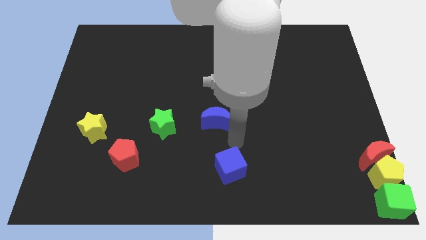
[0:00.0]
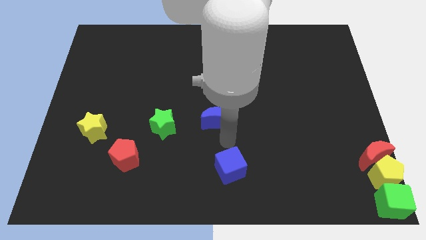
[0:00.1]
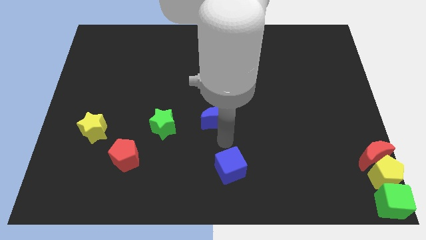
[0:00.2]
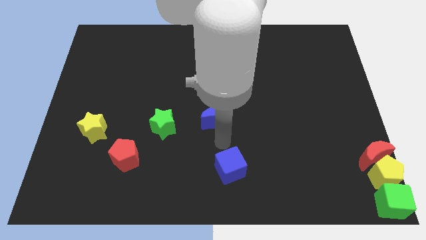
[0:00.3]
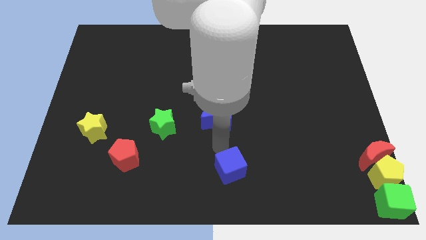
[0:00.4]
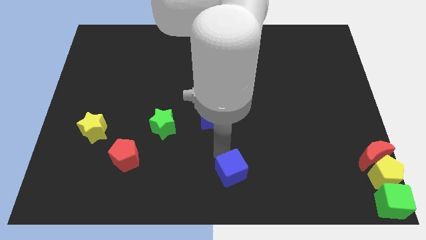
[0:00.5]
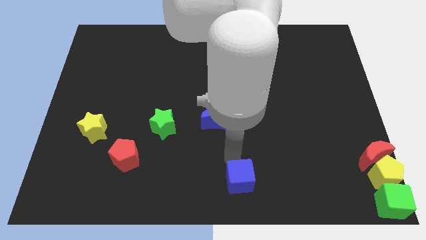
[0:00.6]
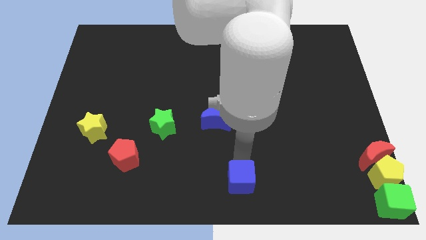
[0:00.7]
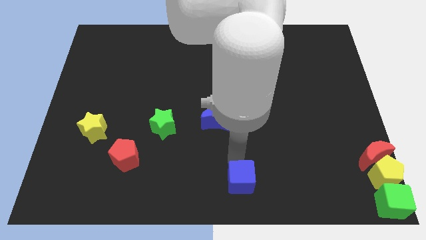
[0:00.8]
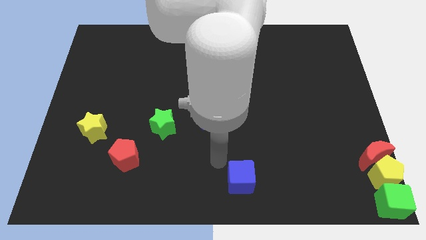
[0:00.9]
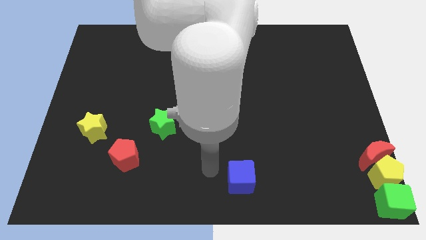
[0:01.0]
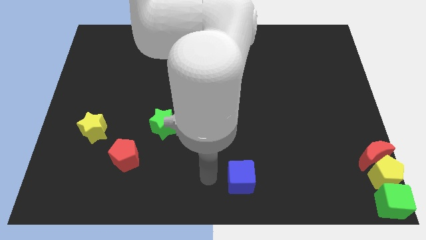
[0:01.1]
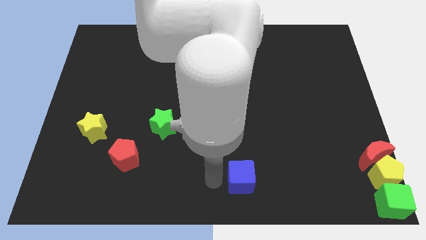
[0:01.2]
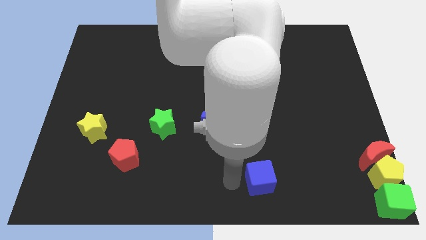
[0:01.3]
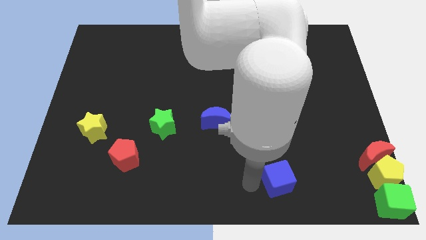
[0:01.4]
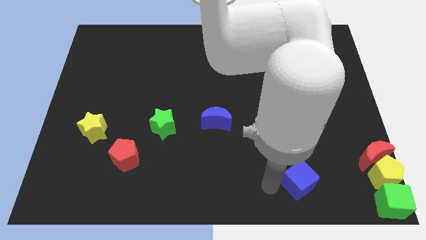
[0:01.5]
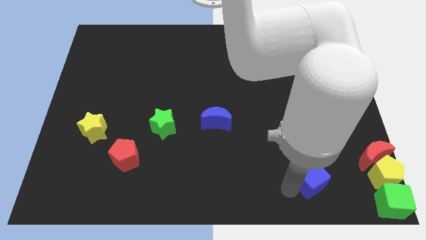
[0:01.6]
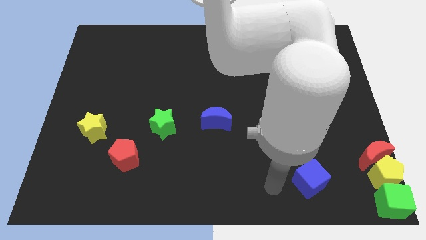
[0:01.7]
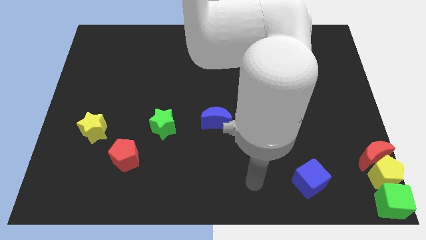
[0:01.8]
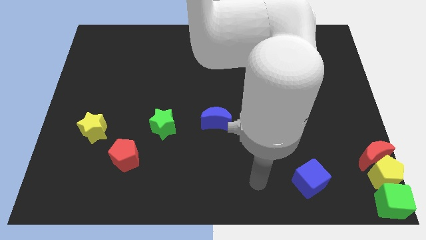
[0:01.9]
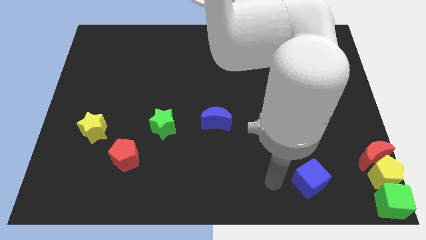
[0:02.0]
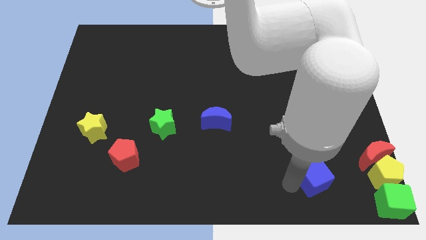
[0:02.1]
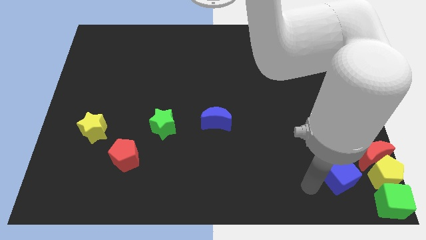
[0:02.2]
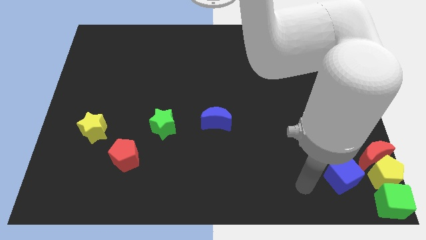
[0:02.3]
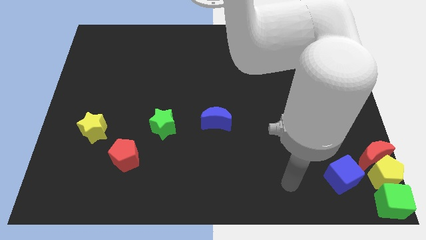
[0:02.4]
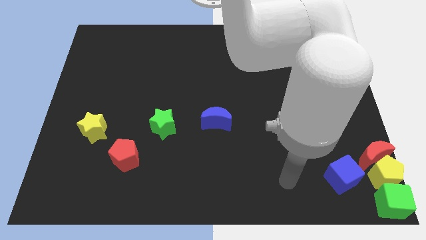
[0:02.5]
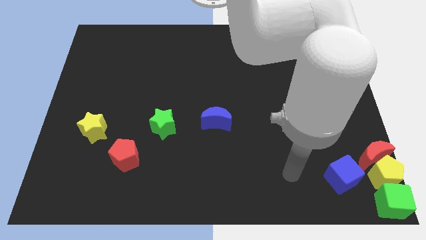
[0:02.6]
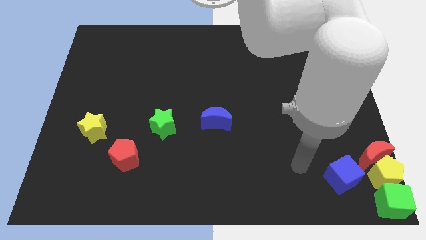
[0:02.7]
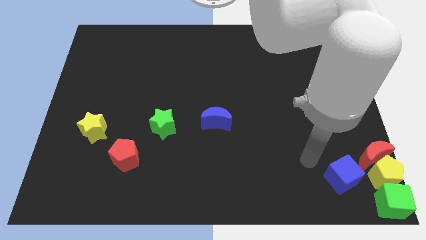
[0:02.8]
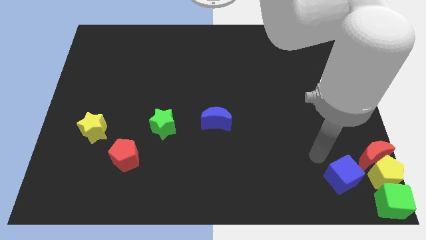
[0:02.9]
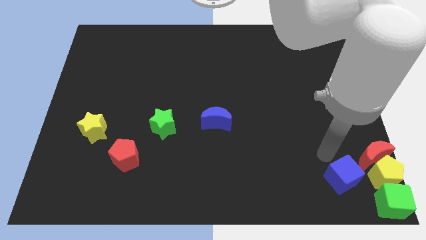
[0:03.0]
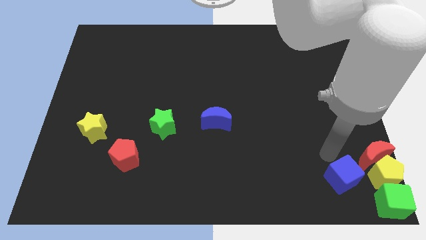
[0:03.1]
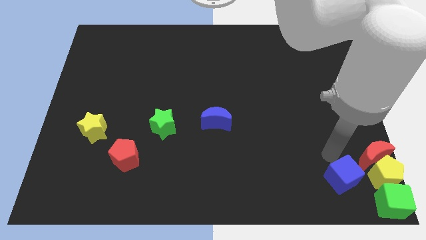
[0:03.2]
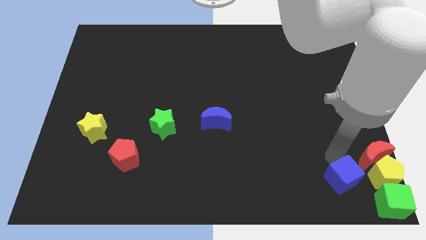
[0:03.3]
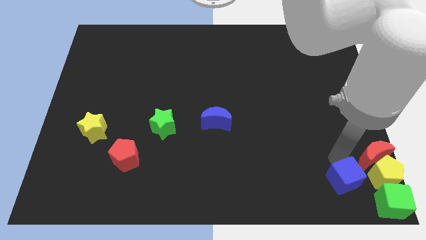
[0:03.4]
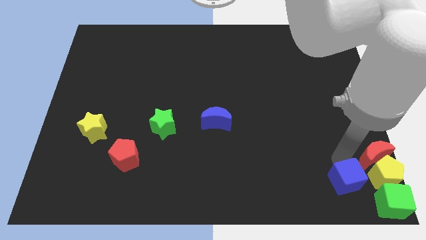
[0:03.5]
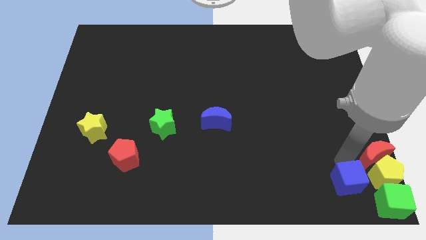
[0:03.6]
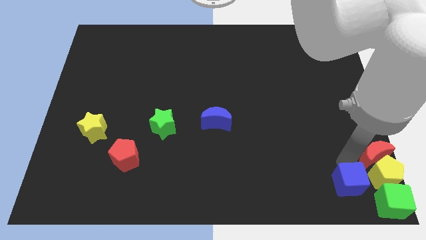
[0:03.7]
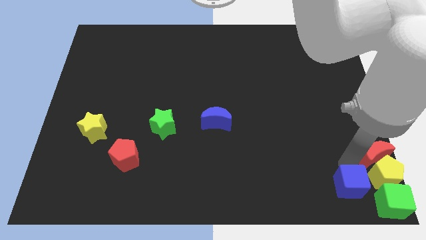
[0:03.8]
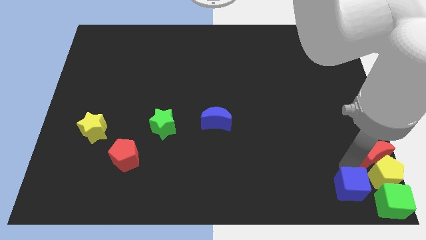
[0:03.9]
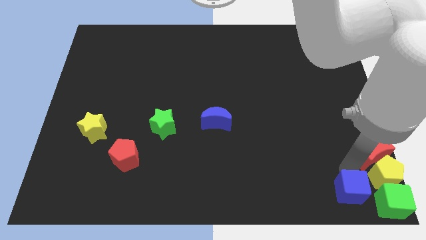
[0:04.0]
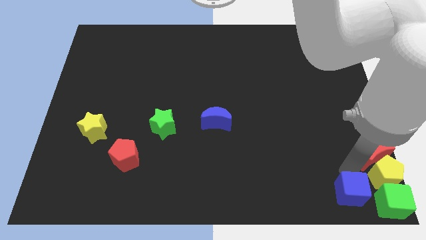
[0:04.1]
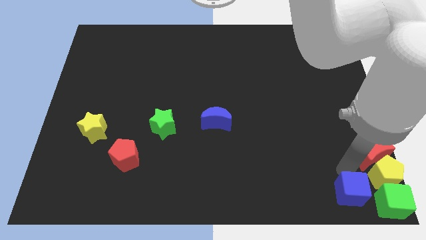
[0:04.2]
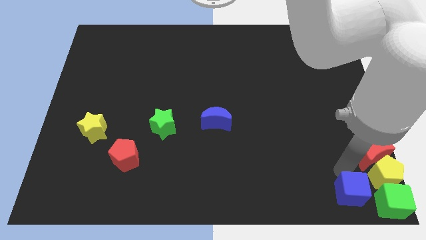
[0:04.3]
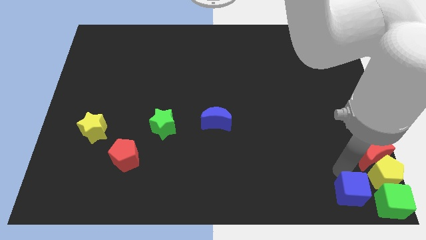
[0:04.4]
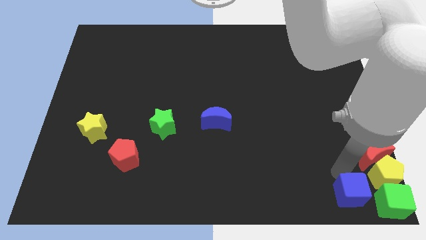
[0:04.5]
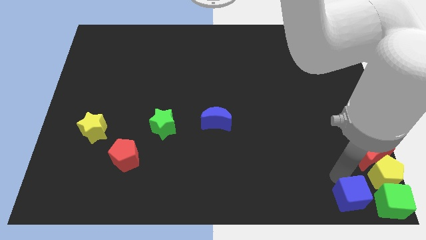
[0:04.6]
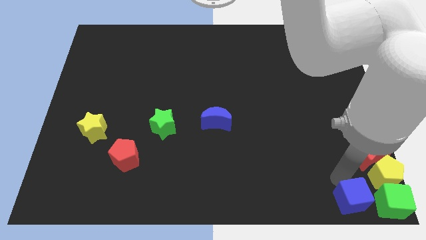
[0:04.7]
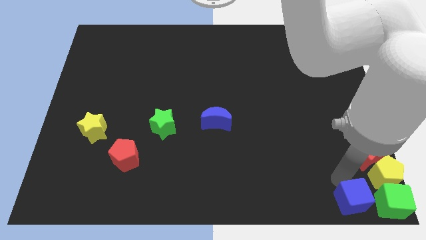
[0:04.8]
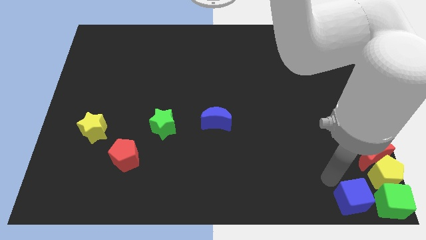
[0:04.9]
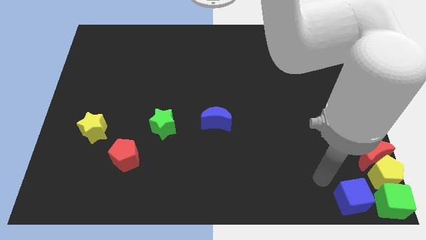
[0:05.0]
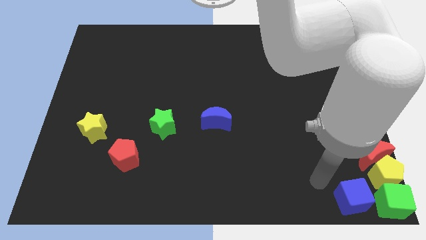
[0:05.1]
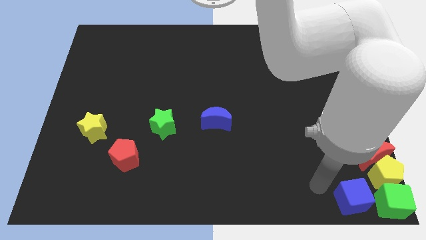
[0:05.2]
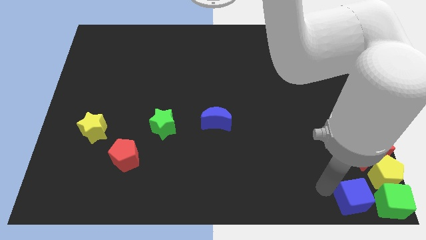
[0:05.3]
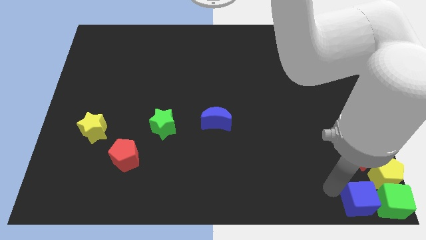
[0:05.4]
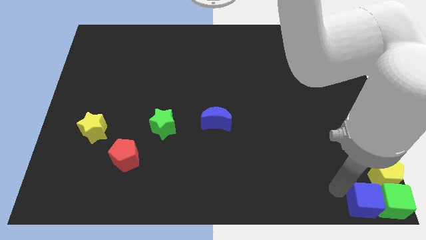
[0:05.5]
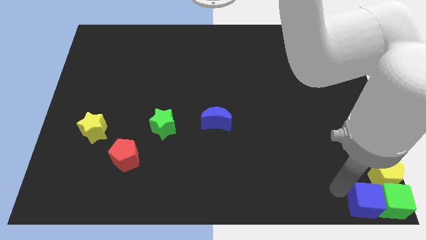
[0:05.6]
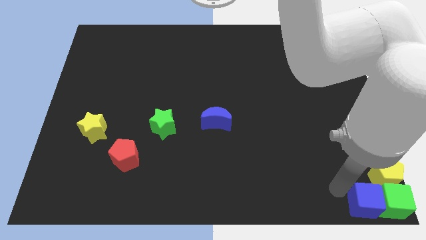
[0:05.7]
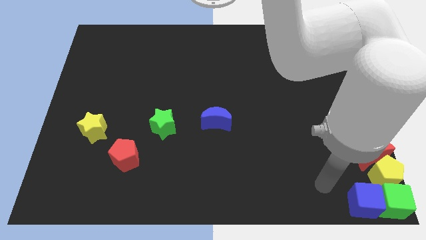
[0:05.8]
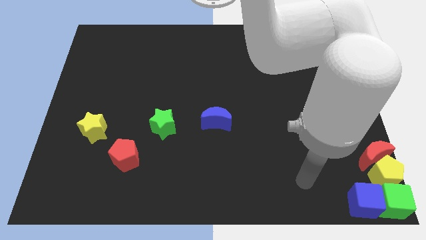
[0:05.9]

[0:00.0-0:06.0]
place the blue cube left to green cube

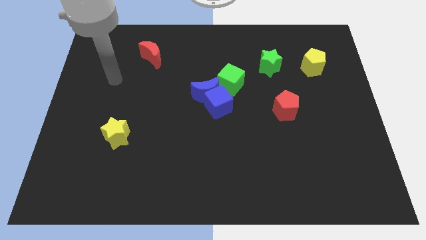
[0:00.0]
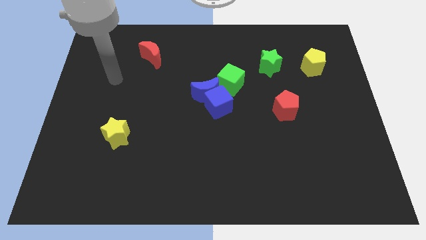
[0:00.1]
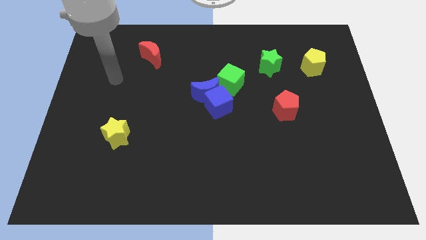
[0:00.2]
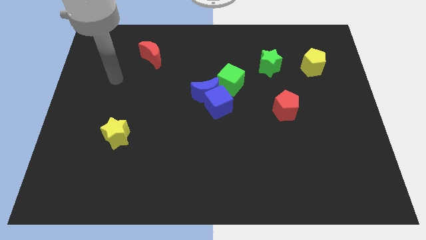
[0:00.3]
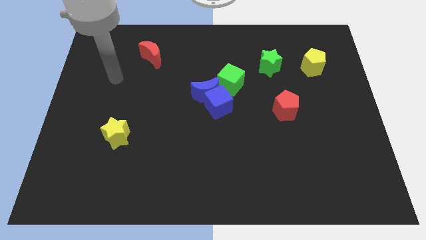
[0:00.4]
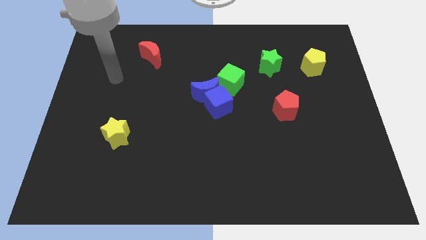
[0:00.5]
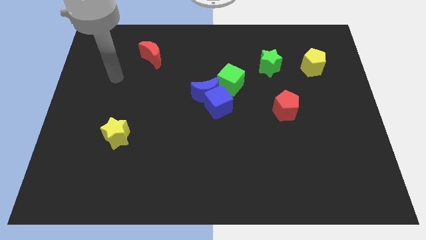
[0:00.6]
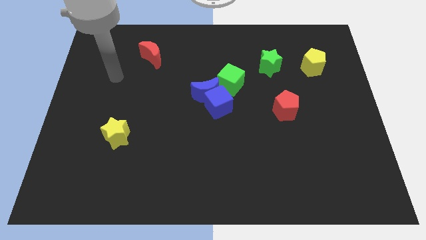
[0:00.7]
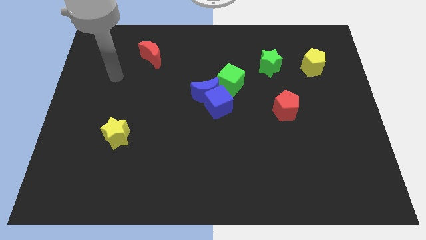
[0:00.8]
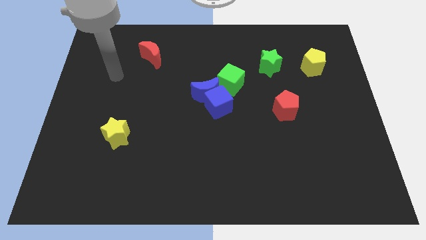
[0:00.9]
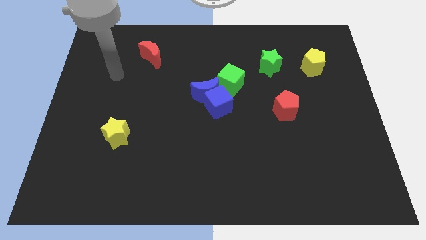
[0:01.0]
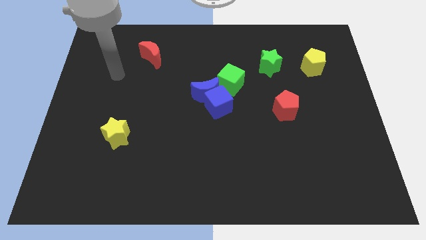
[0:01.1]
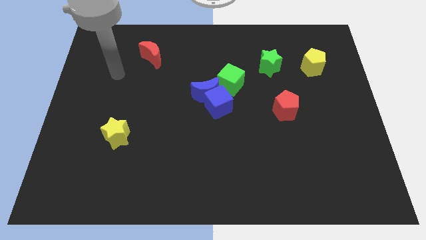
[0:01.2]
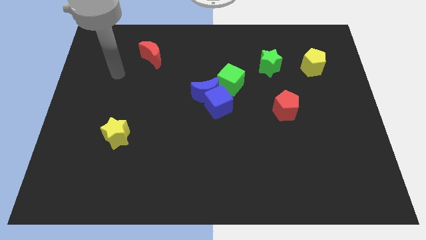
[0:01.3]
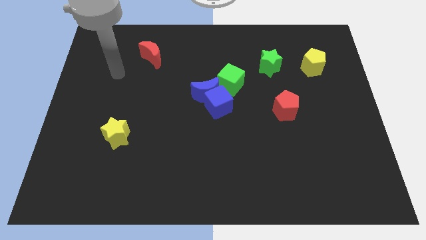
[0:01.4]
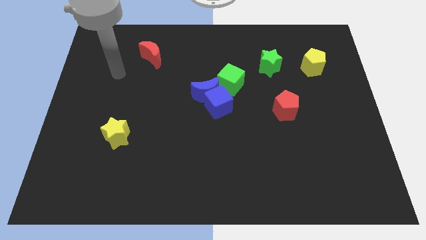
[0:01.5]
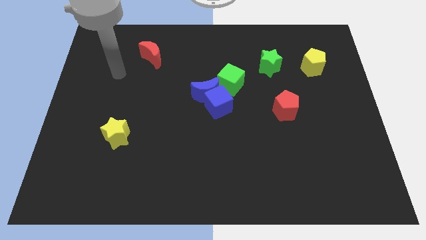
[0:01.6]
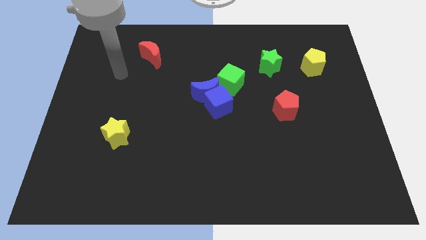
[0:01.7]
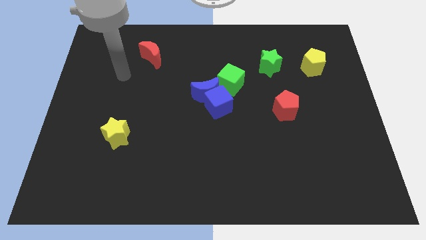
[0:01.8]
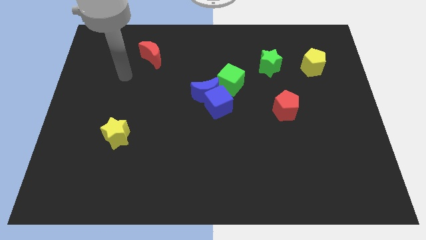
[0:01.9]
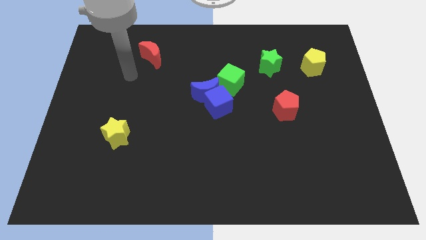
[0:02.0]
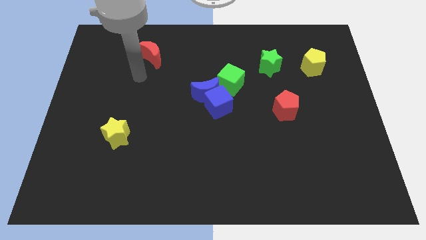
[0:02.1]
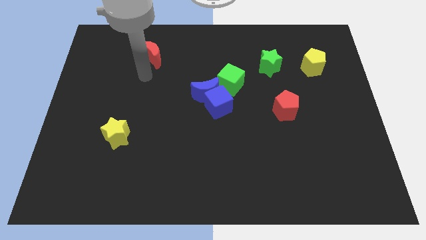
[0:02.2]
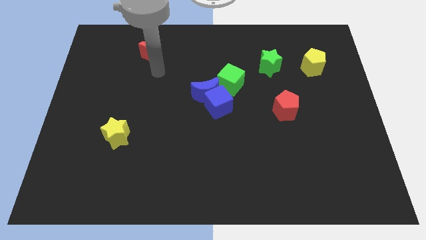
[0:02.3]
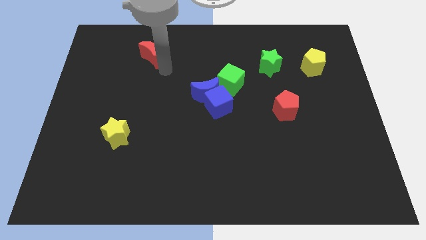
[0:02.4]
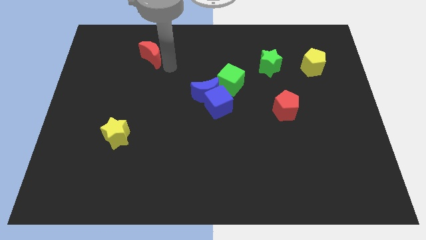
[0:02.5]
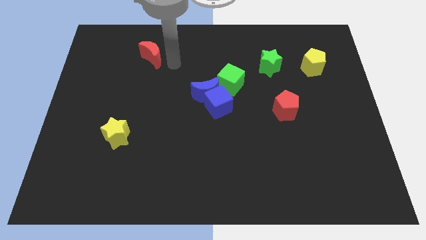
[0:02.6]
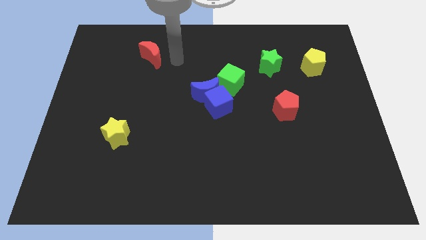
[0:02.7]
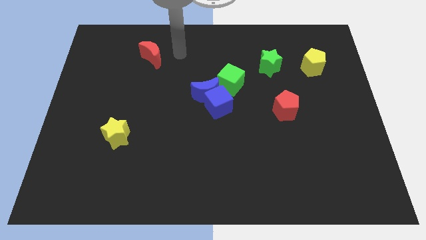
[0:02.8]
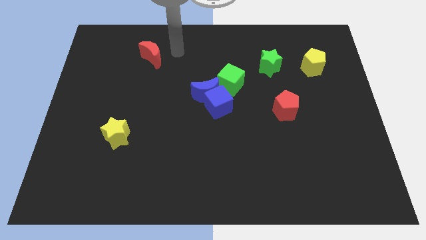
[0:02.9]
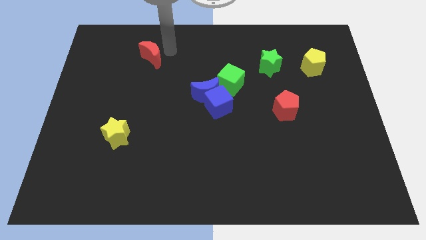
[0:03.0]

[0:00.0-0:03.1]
move the arm to the red crescent on the right side
